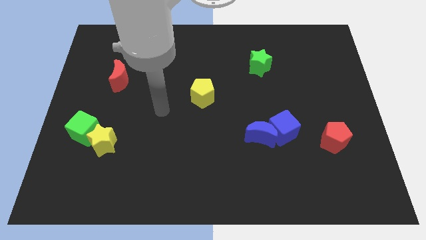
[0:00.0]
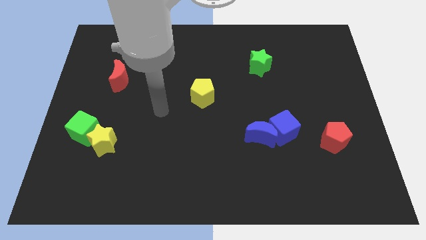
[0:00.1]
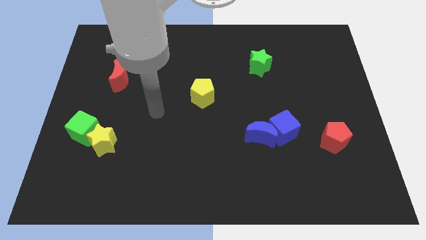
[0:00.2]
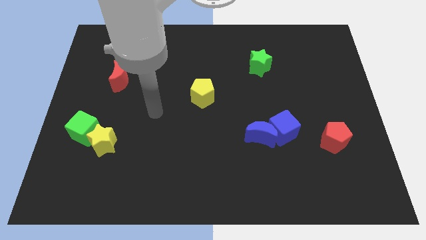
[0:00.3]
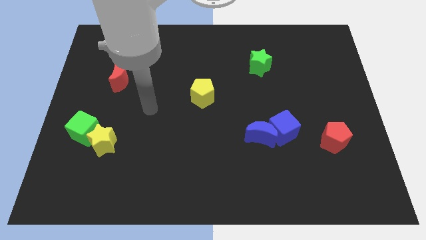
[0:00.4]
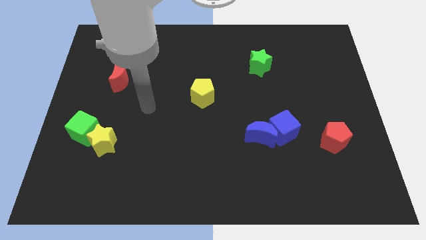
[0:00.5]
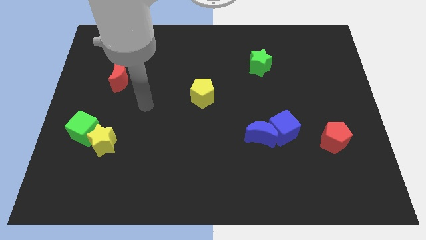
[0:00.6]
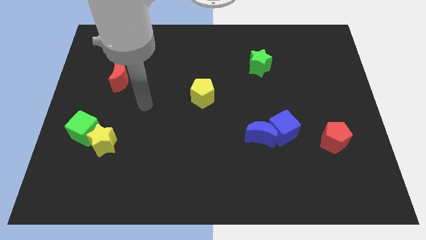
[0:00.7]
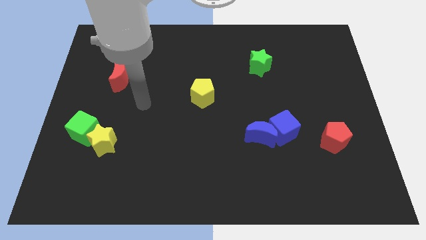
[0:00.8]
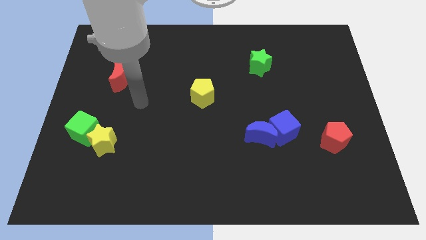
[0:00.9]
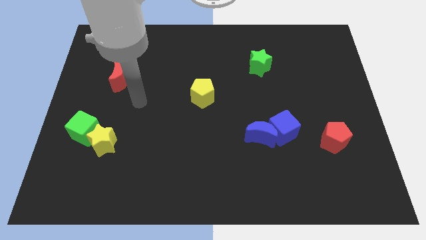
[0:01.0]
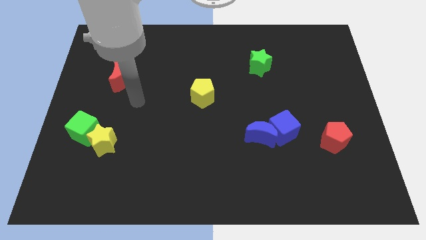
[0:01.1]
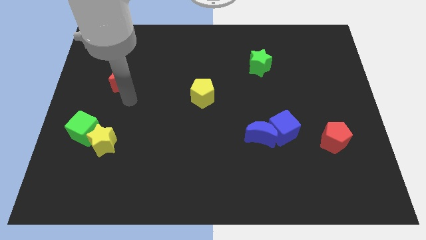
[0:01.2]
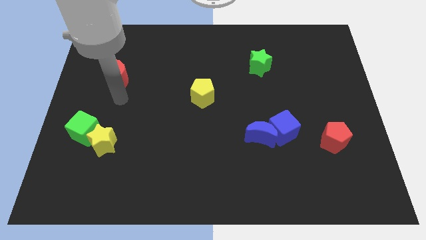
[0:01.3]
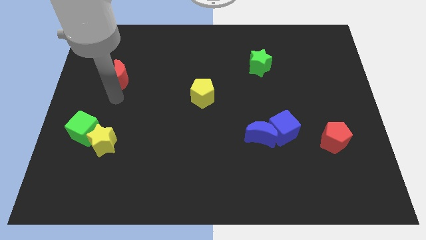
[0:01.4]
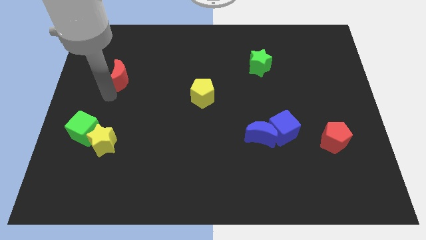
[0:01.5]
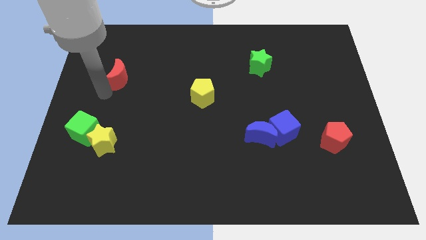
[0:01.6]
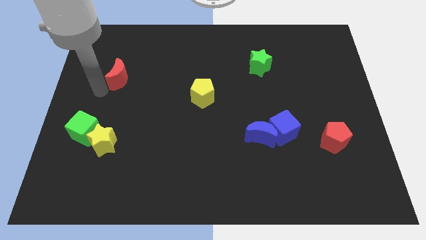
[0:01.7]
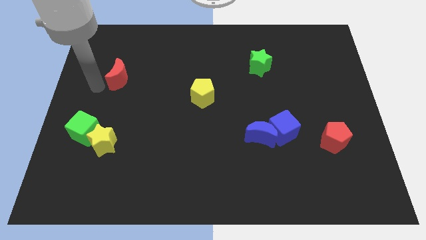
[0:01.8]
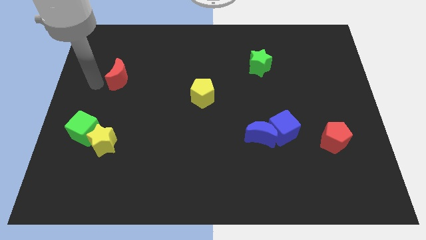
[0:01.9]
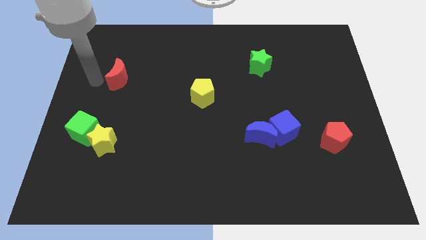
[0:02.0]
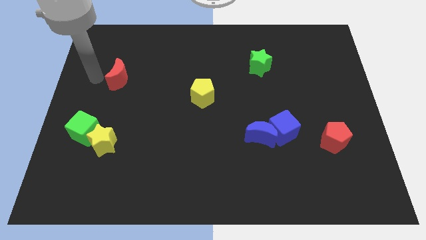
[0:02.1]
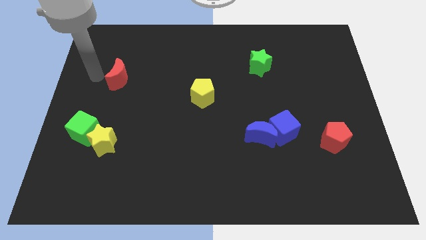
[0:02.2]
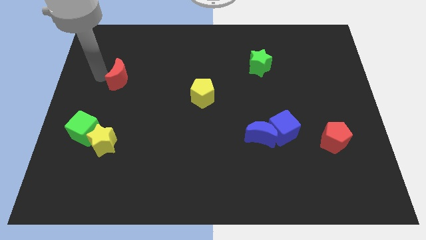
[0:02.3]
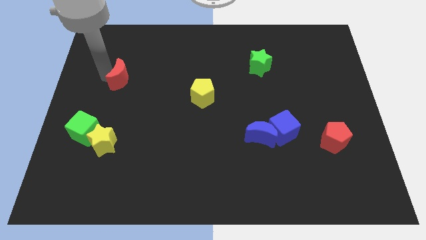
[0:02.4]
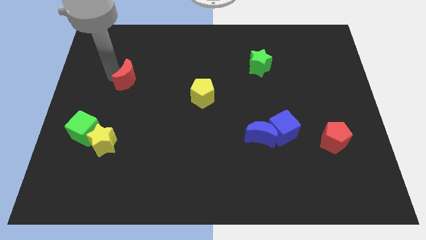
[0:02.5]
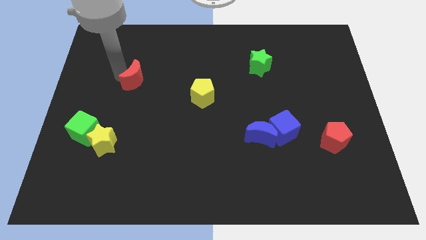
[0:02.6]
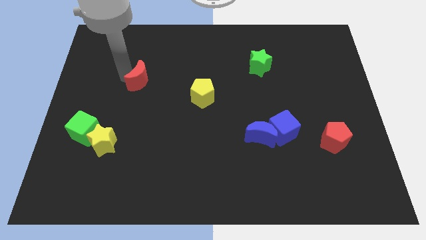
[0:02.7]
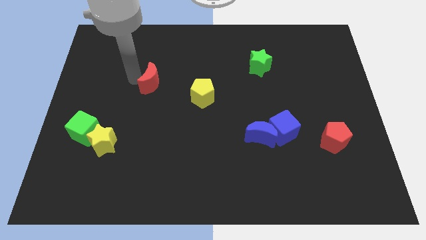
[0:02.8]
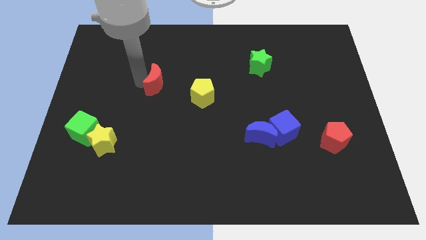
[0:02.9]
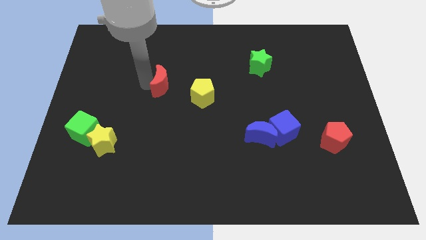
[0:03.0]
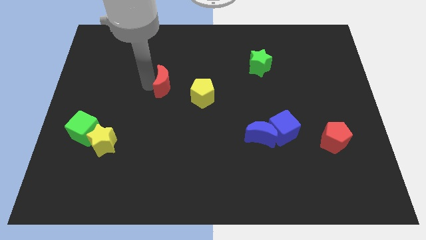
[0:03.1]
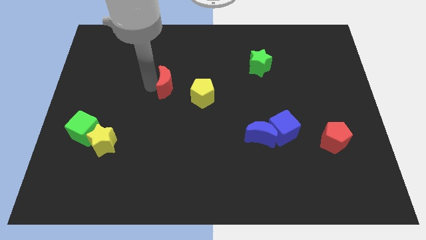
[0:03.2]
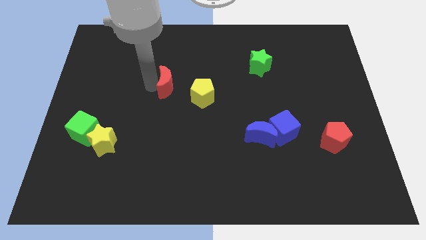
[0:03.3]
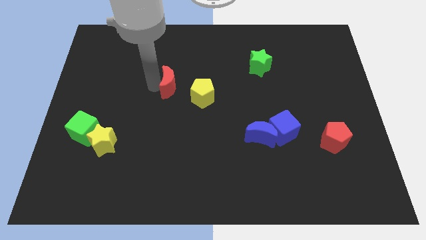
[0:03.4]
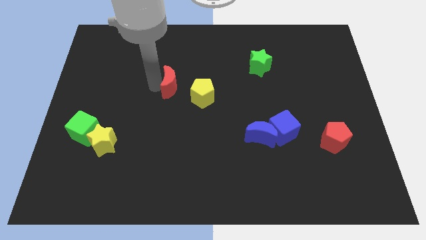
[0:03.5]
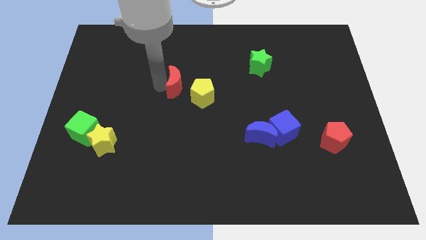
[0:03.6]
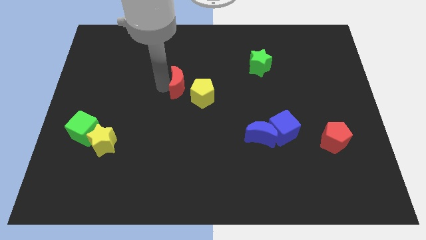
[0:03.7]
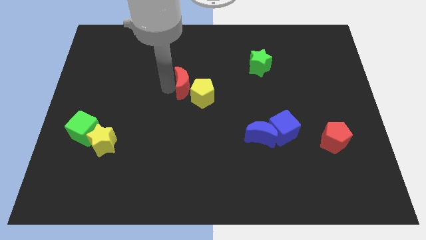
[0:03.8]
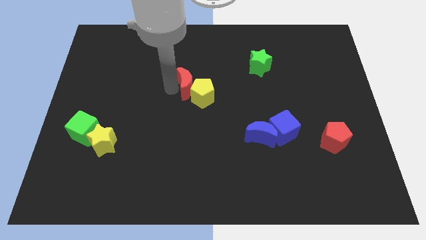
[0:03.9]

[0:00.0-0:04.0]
push the red crescent into the yellow pentagon

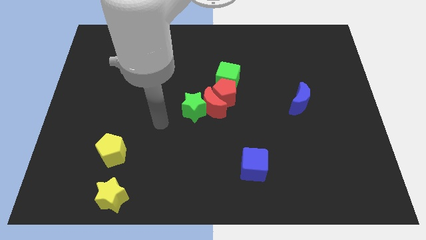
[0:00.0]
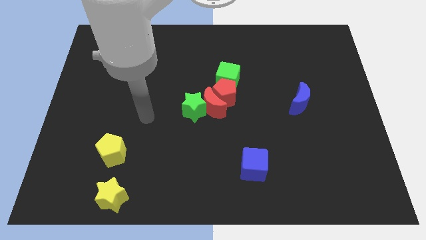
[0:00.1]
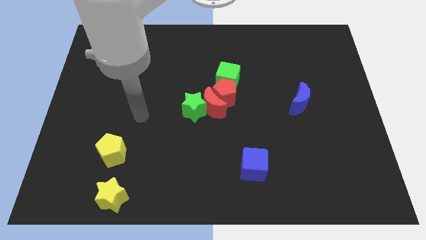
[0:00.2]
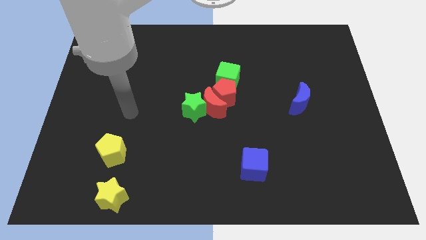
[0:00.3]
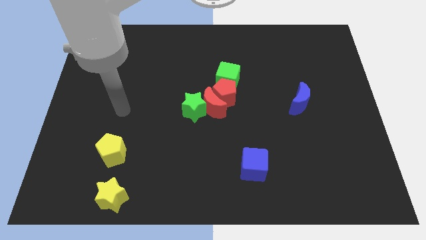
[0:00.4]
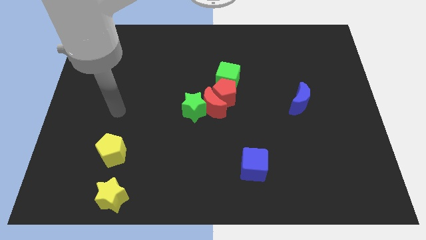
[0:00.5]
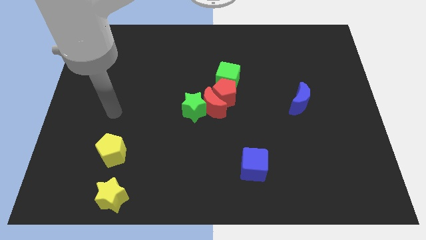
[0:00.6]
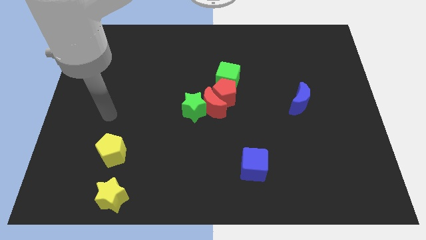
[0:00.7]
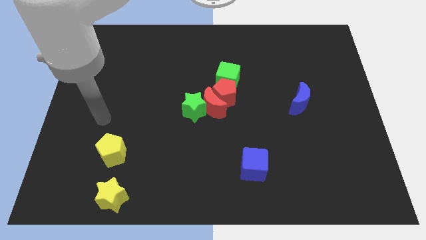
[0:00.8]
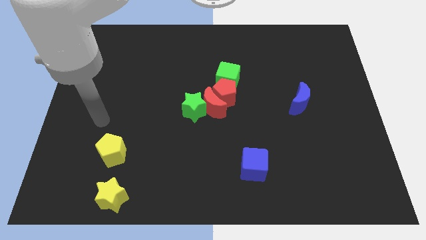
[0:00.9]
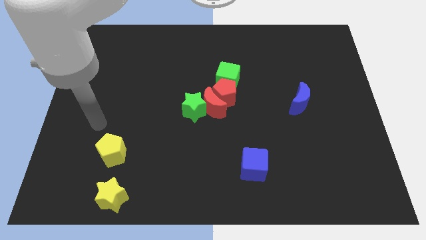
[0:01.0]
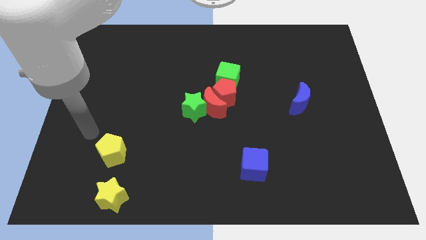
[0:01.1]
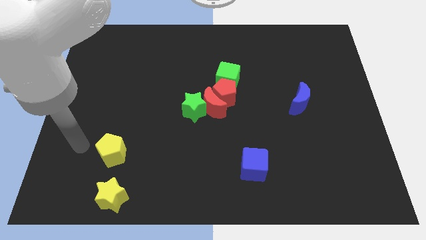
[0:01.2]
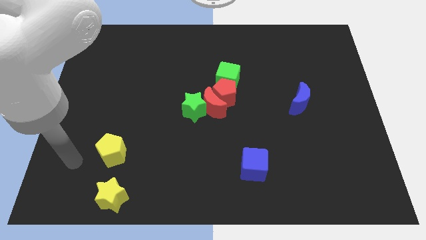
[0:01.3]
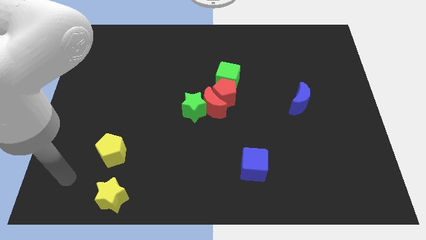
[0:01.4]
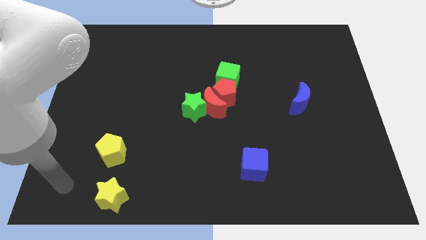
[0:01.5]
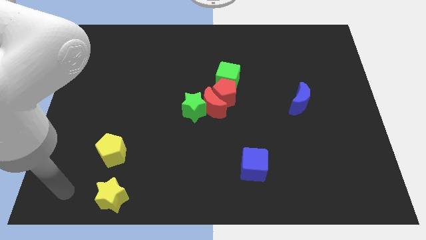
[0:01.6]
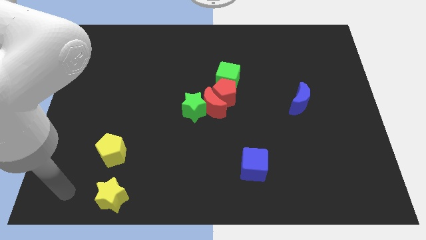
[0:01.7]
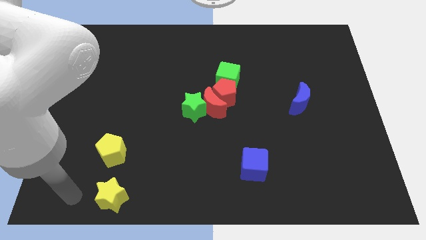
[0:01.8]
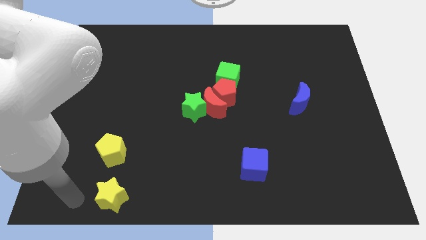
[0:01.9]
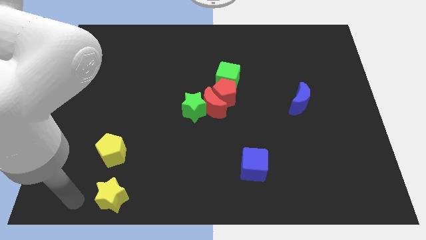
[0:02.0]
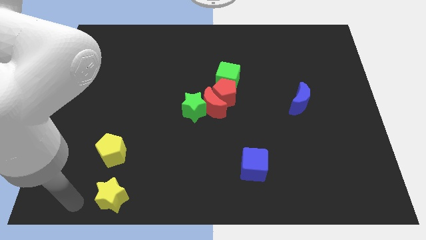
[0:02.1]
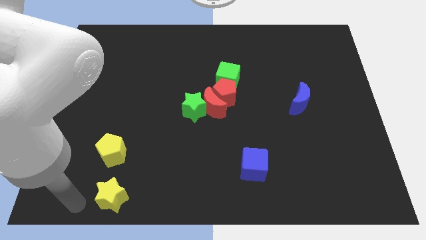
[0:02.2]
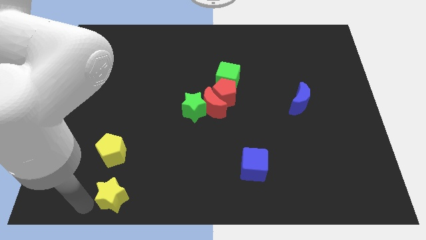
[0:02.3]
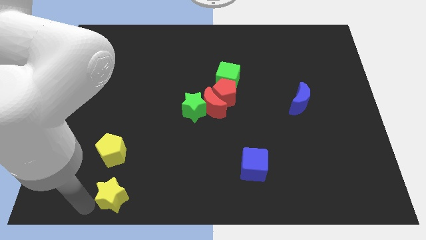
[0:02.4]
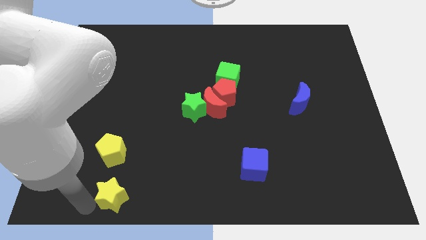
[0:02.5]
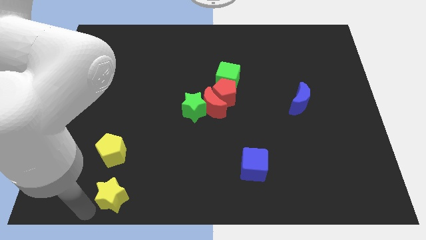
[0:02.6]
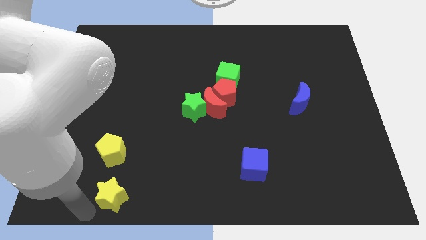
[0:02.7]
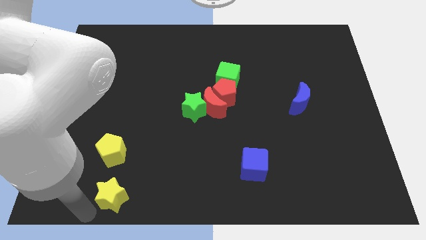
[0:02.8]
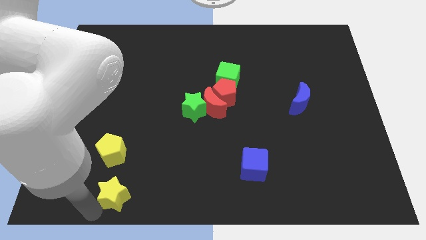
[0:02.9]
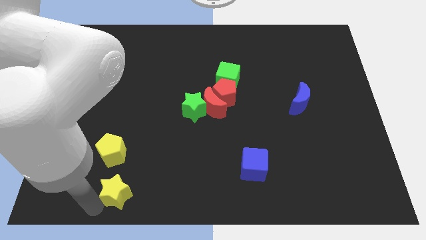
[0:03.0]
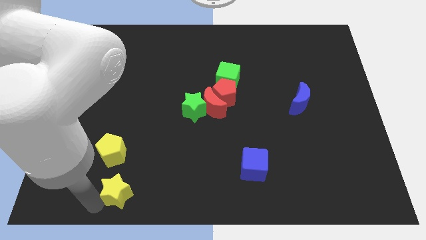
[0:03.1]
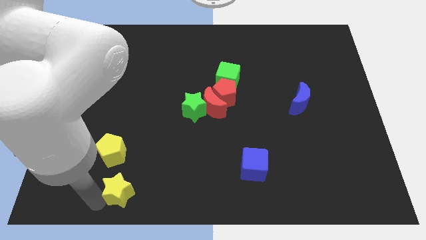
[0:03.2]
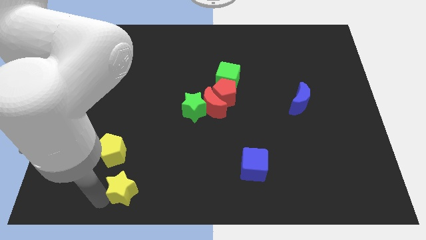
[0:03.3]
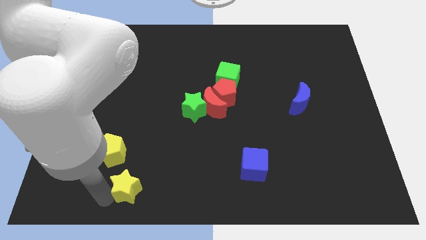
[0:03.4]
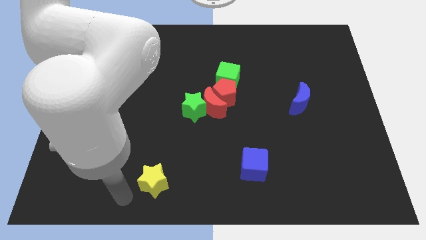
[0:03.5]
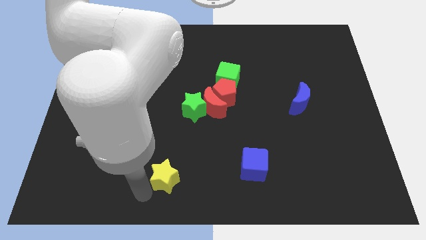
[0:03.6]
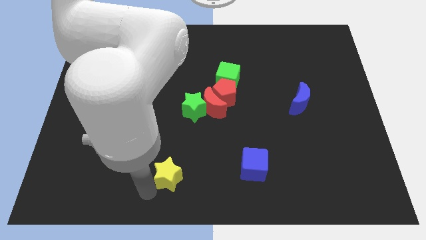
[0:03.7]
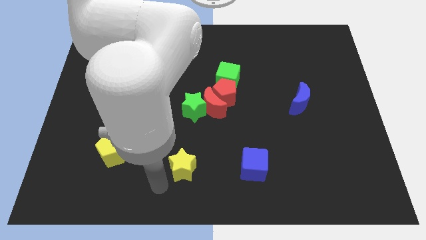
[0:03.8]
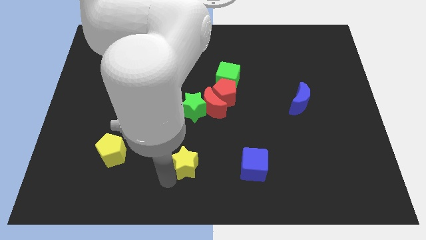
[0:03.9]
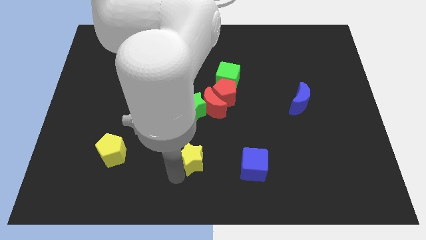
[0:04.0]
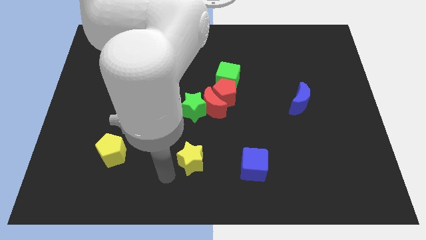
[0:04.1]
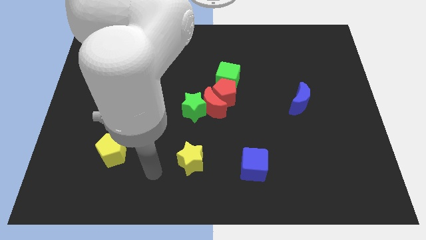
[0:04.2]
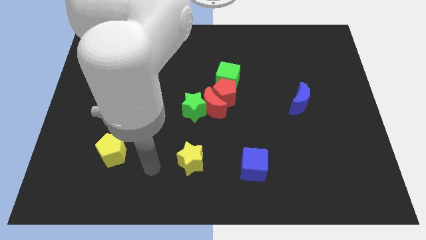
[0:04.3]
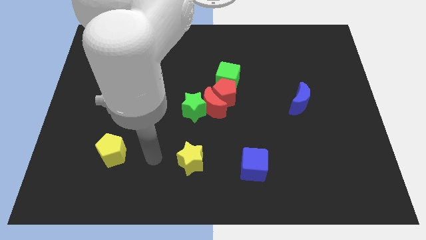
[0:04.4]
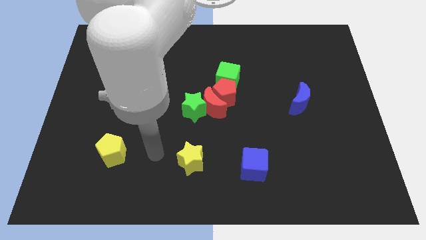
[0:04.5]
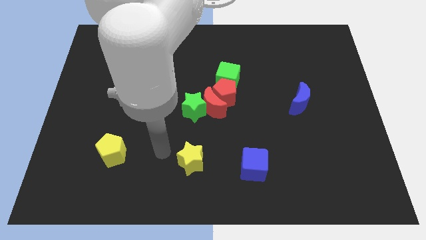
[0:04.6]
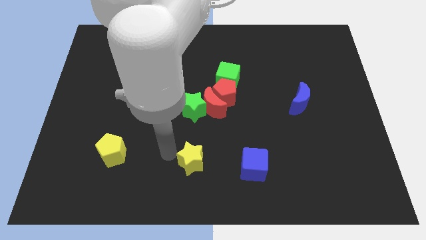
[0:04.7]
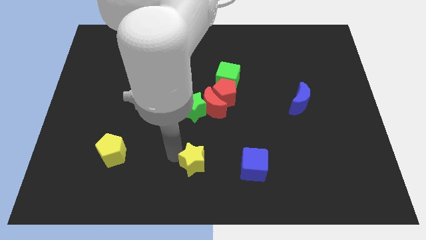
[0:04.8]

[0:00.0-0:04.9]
place the yellow star below the green star
